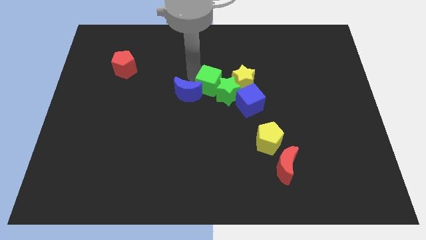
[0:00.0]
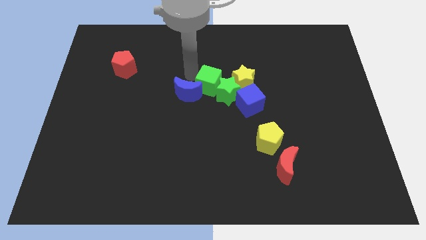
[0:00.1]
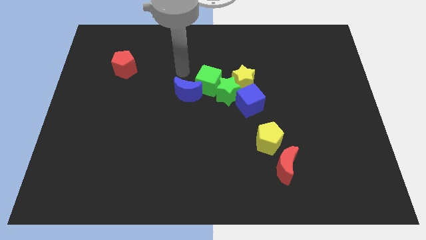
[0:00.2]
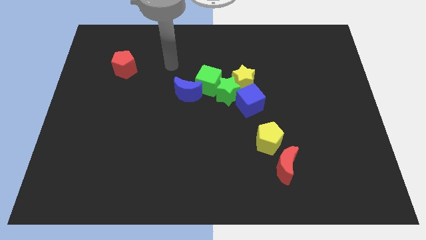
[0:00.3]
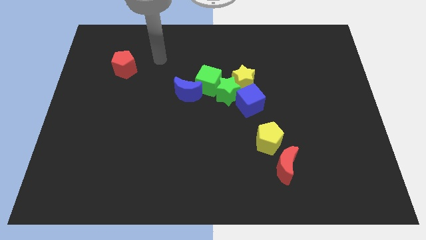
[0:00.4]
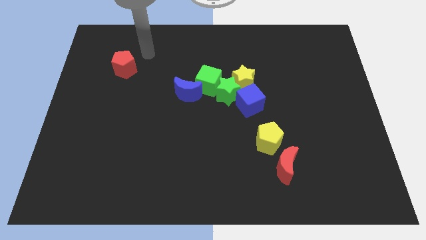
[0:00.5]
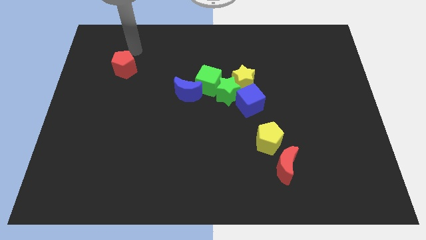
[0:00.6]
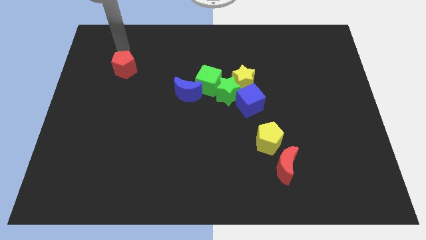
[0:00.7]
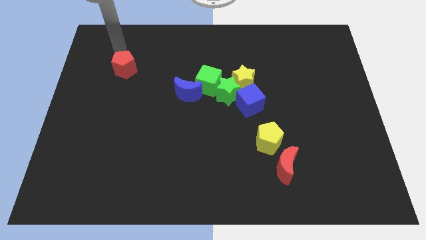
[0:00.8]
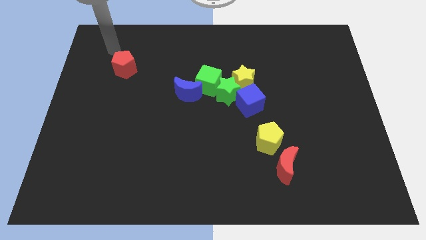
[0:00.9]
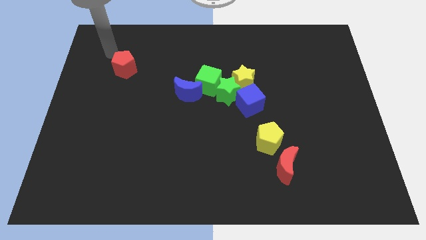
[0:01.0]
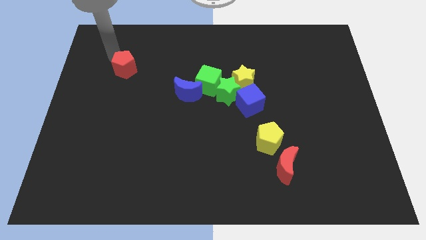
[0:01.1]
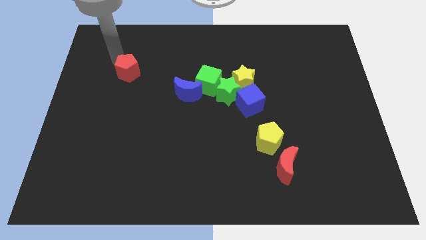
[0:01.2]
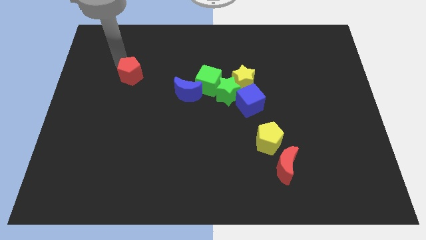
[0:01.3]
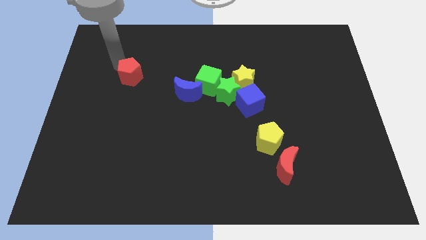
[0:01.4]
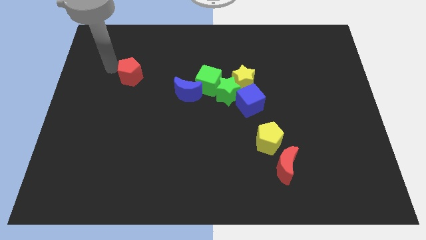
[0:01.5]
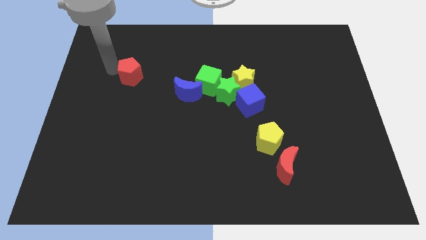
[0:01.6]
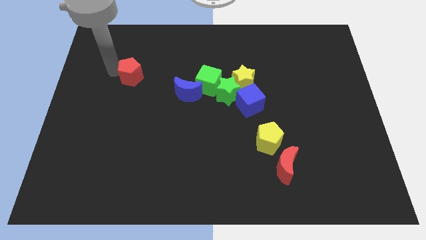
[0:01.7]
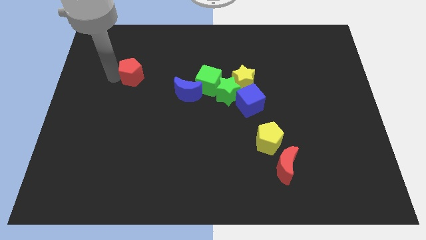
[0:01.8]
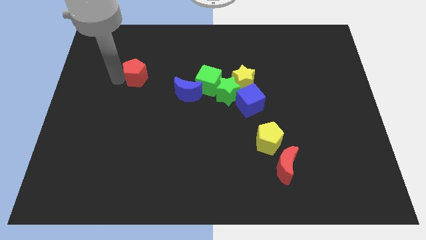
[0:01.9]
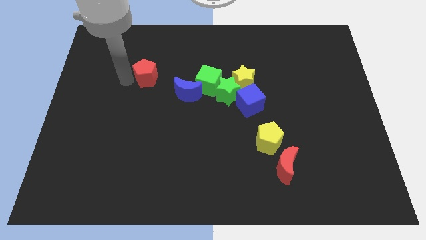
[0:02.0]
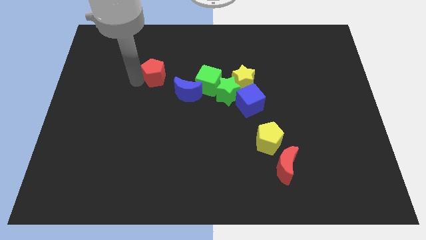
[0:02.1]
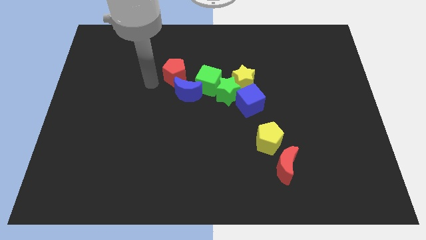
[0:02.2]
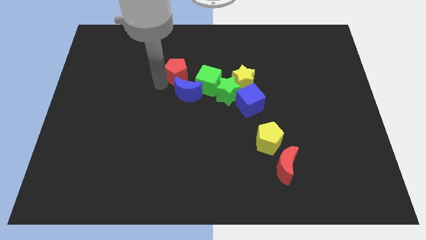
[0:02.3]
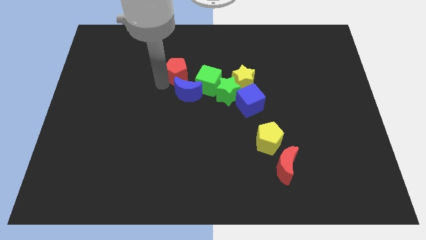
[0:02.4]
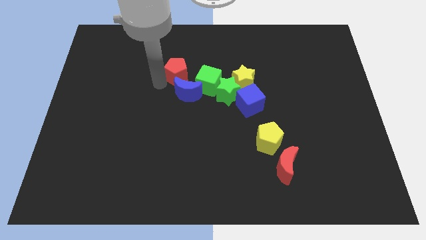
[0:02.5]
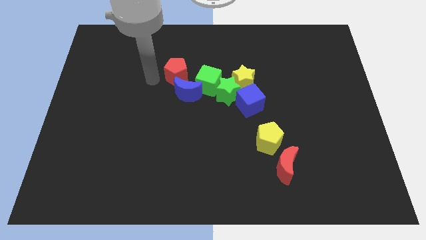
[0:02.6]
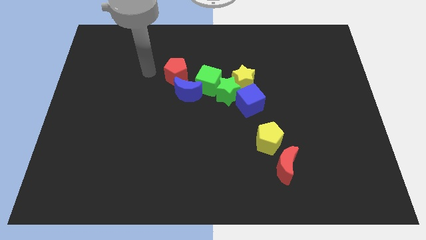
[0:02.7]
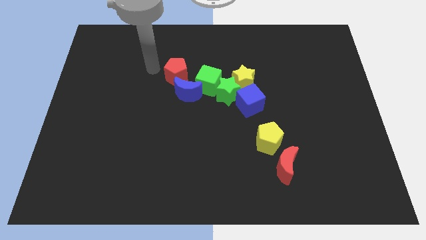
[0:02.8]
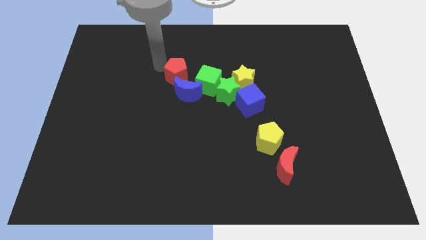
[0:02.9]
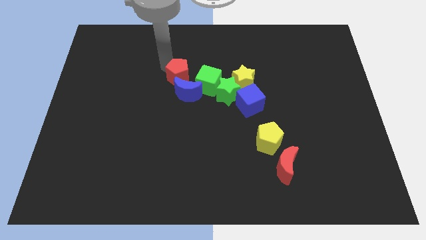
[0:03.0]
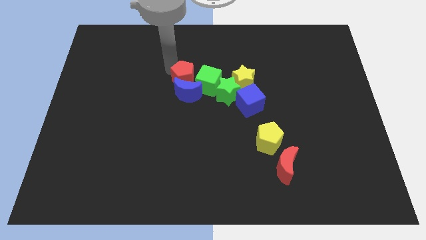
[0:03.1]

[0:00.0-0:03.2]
slide the red pentagon towards the green cube

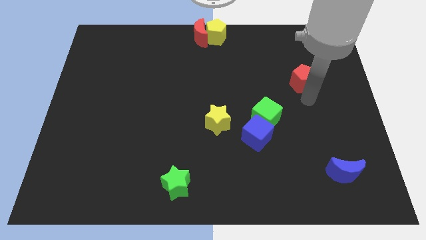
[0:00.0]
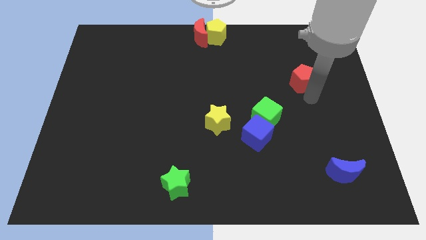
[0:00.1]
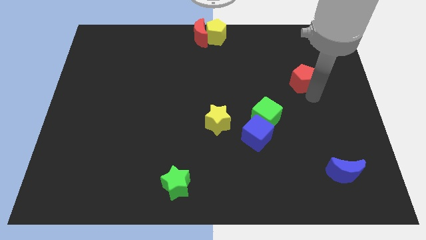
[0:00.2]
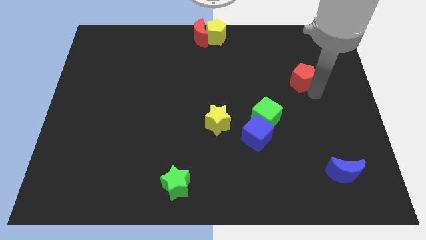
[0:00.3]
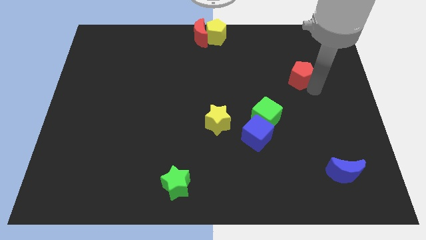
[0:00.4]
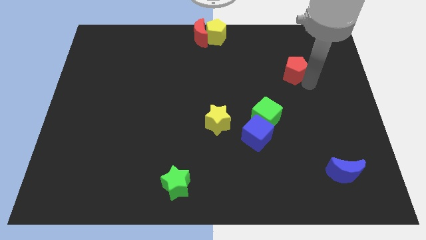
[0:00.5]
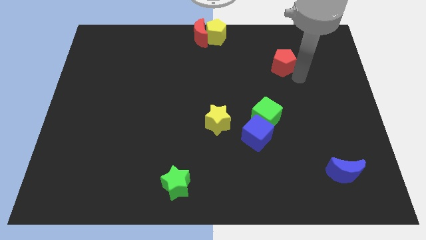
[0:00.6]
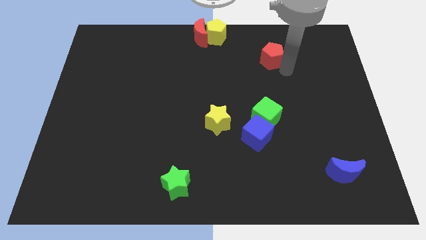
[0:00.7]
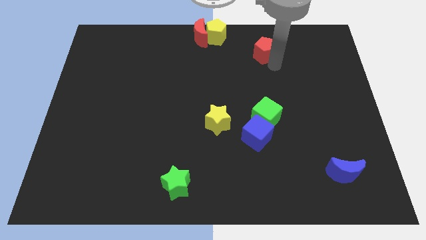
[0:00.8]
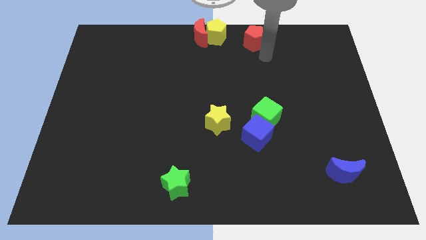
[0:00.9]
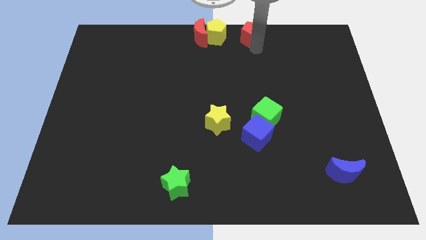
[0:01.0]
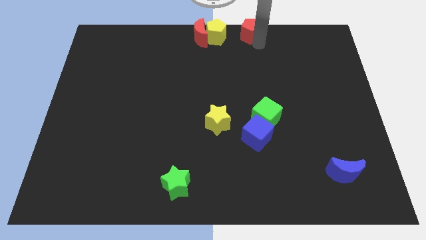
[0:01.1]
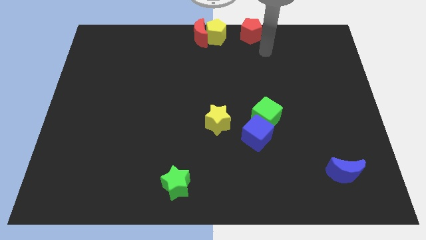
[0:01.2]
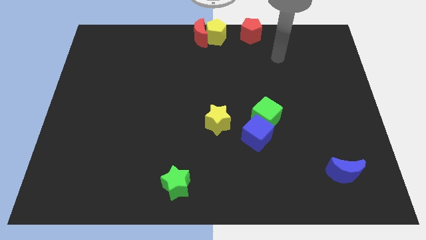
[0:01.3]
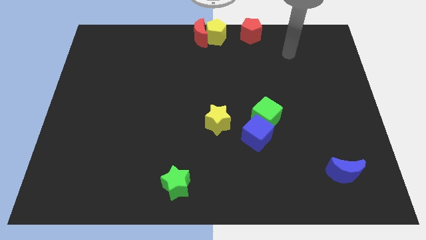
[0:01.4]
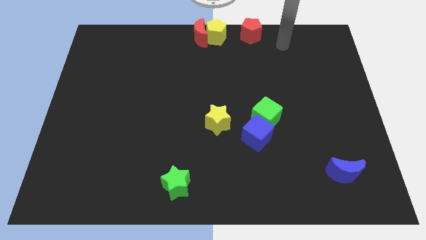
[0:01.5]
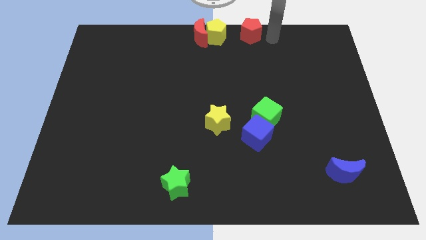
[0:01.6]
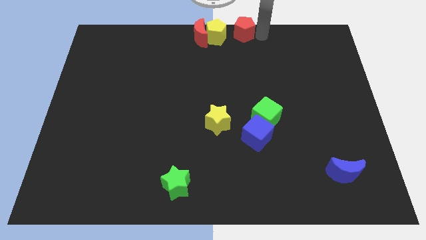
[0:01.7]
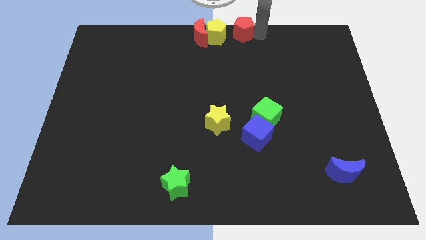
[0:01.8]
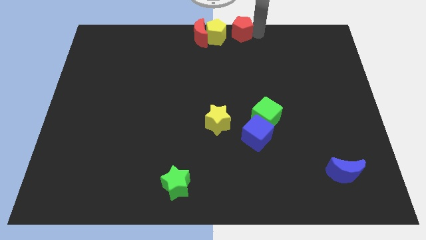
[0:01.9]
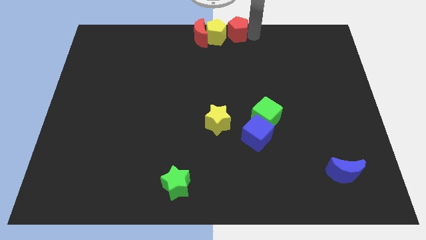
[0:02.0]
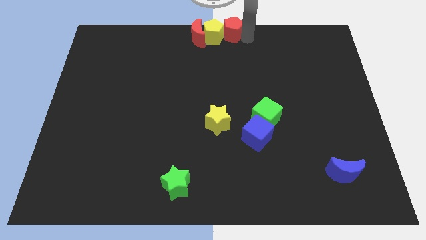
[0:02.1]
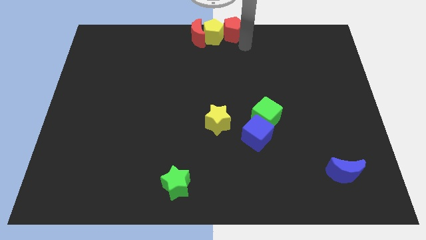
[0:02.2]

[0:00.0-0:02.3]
push the red pentagon to the right of the yellow pentagon

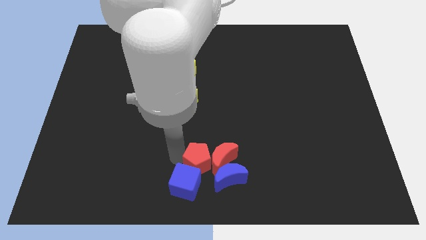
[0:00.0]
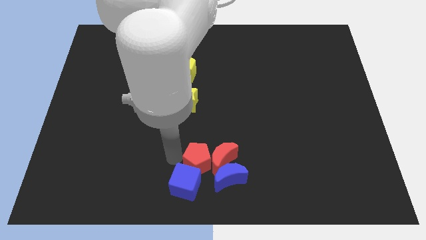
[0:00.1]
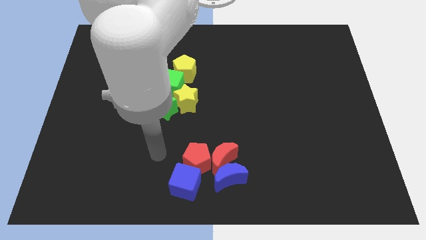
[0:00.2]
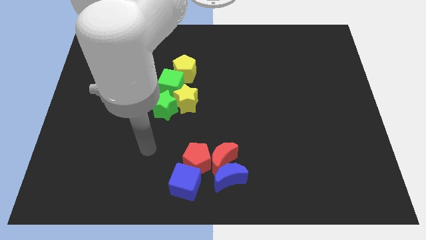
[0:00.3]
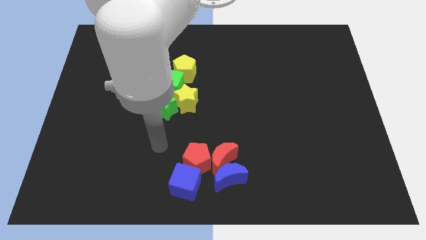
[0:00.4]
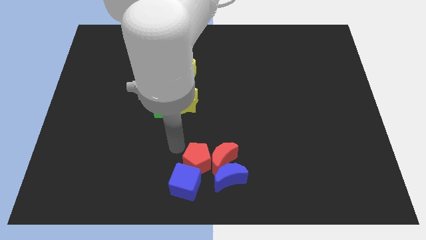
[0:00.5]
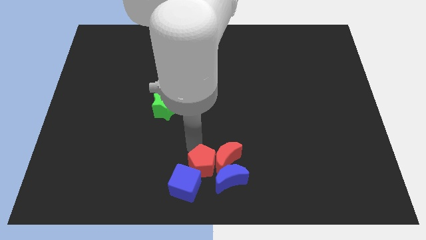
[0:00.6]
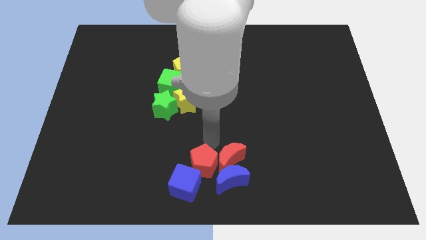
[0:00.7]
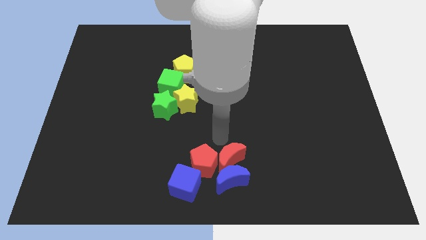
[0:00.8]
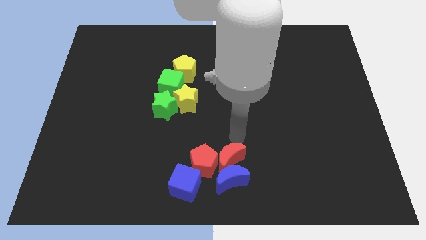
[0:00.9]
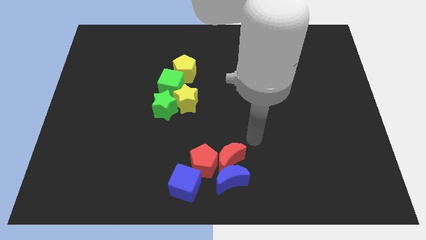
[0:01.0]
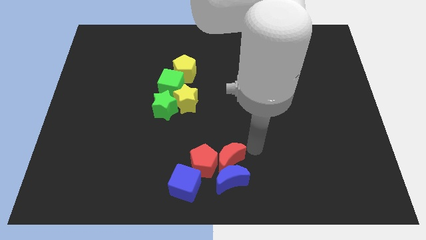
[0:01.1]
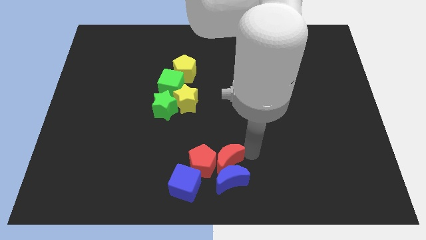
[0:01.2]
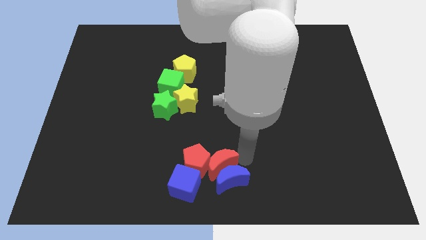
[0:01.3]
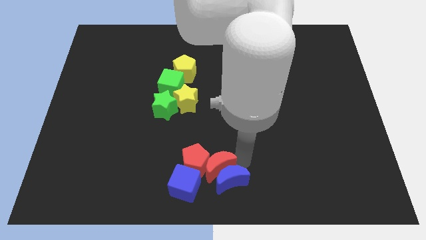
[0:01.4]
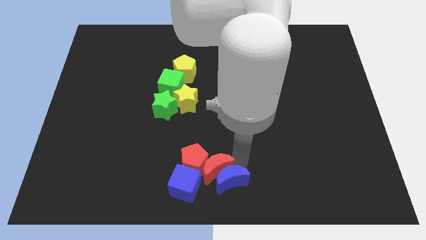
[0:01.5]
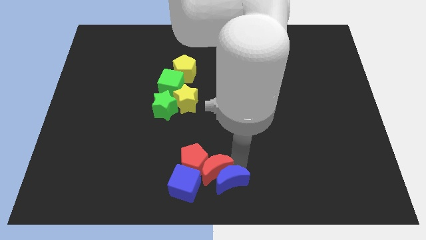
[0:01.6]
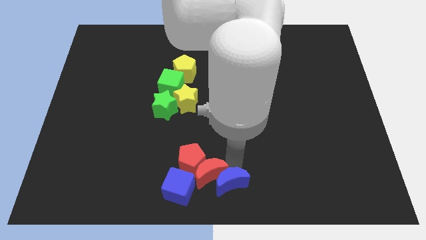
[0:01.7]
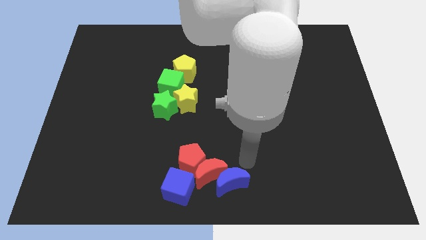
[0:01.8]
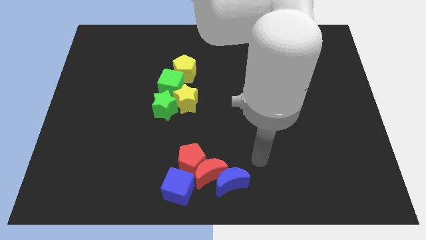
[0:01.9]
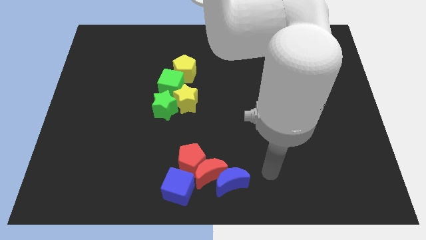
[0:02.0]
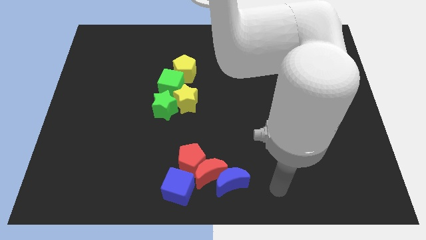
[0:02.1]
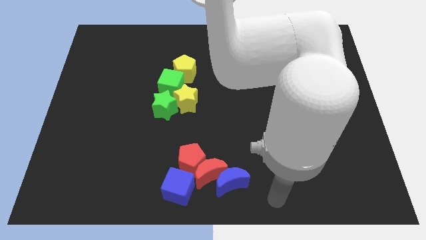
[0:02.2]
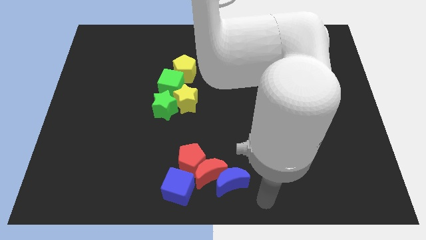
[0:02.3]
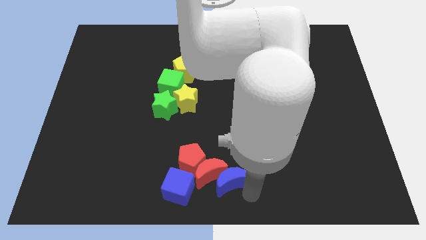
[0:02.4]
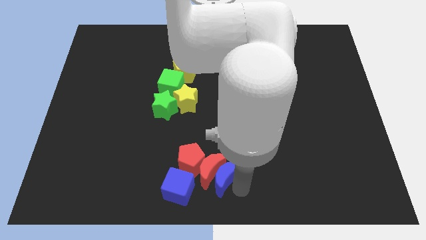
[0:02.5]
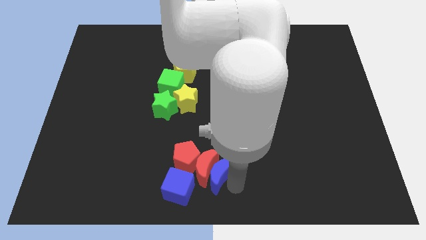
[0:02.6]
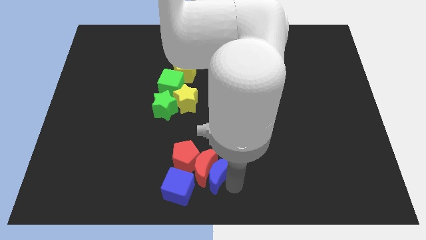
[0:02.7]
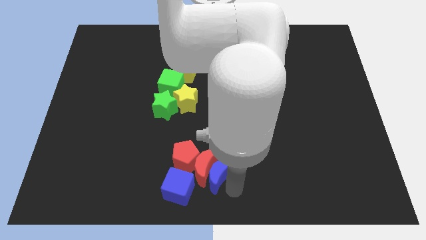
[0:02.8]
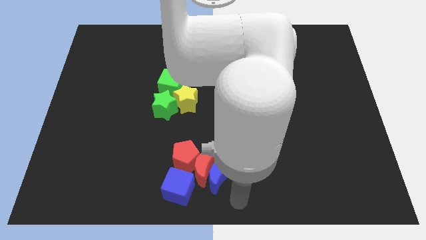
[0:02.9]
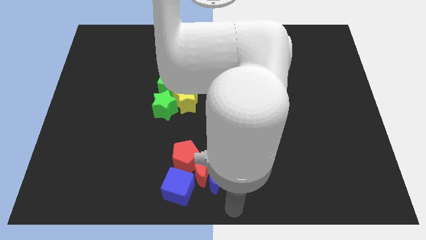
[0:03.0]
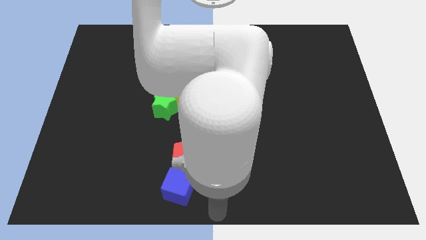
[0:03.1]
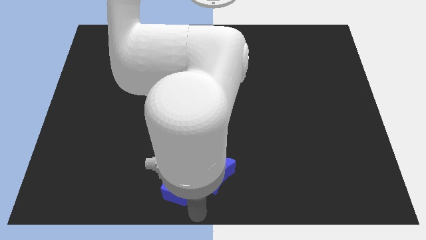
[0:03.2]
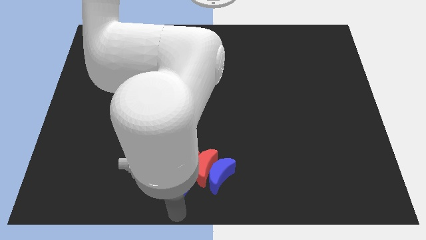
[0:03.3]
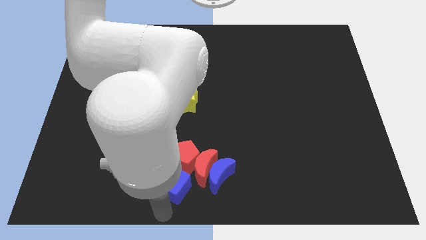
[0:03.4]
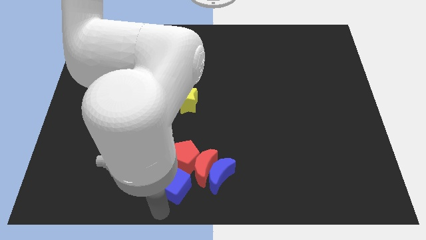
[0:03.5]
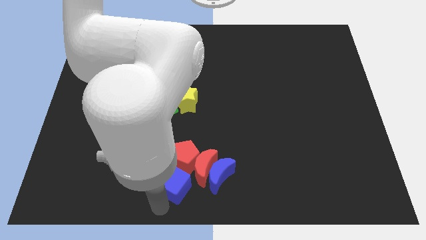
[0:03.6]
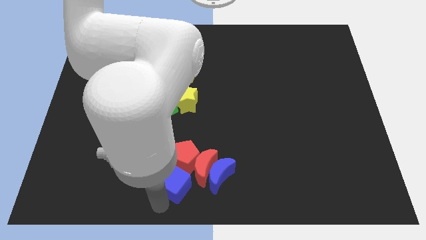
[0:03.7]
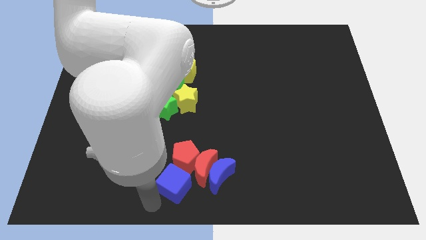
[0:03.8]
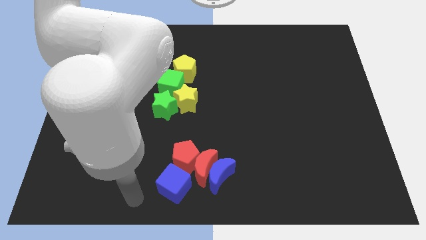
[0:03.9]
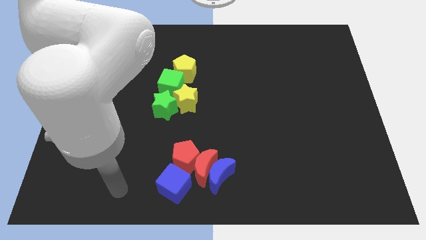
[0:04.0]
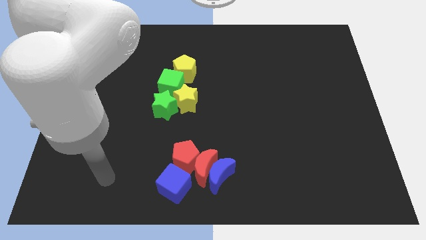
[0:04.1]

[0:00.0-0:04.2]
move red blocks and blue blocks towards bottom center
